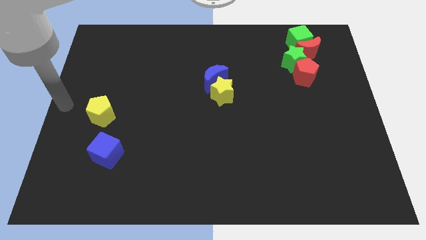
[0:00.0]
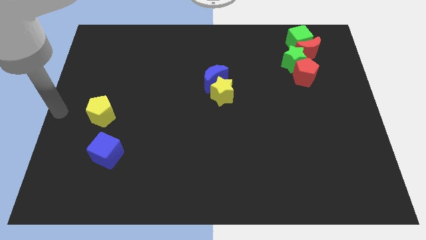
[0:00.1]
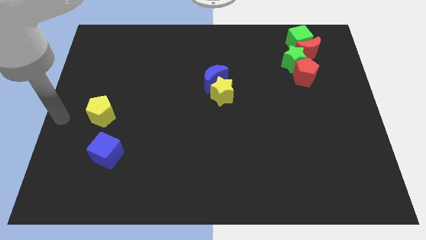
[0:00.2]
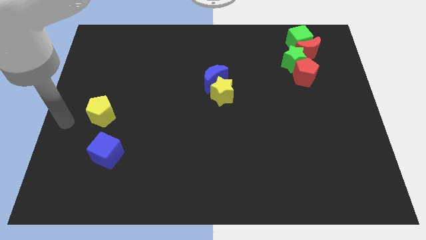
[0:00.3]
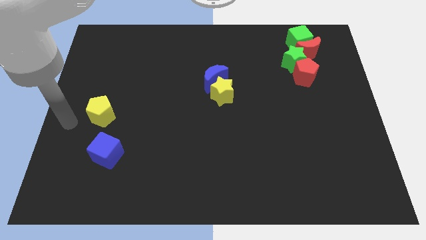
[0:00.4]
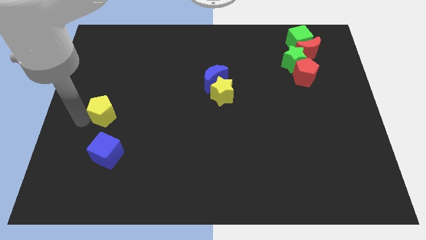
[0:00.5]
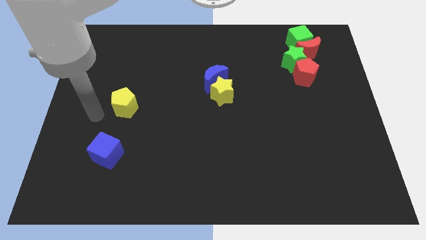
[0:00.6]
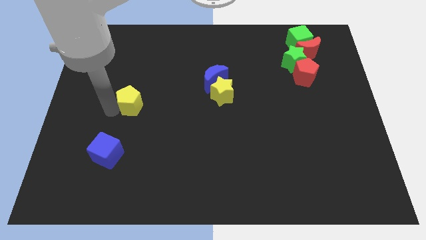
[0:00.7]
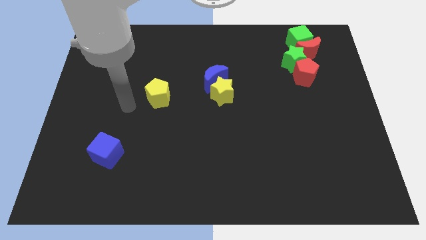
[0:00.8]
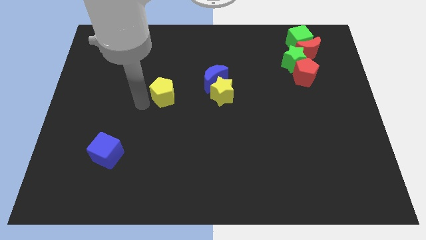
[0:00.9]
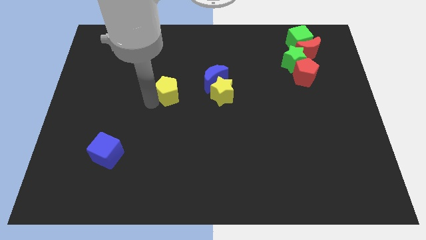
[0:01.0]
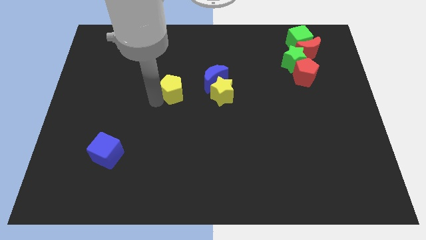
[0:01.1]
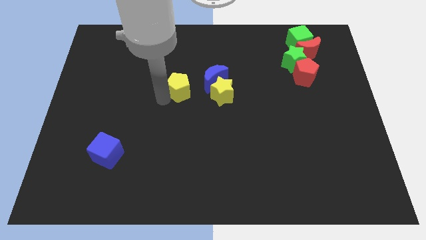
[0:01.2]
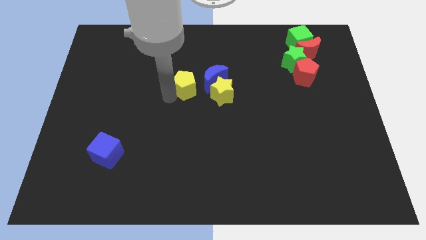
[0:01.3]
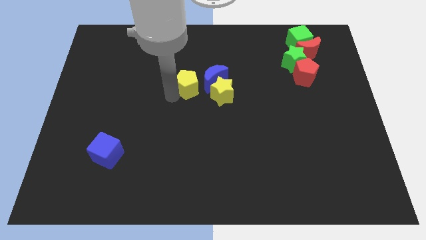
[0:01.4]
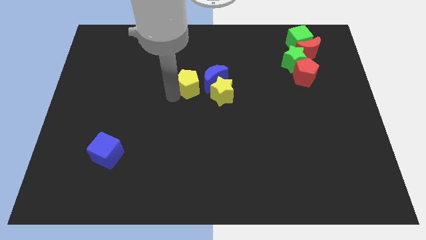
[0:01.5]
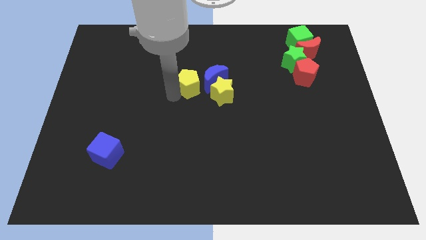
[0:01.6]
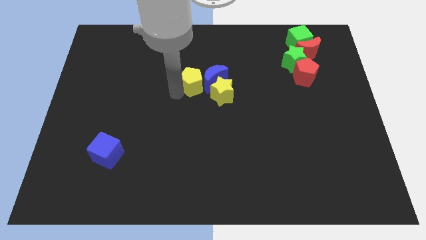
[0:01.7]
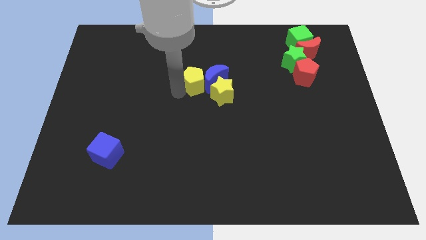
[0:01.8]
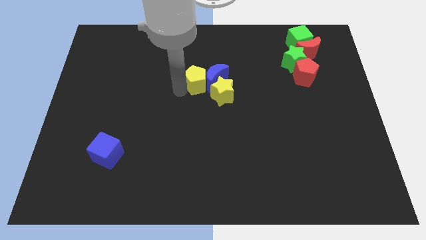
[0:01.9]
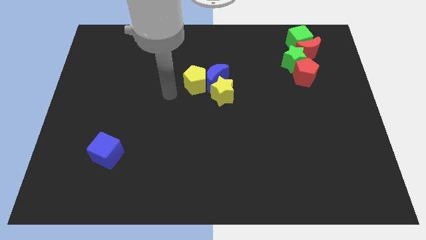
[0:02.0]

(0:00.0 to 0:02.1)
move yellow pentagon close to blue moon

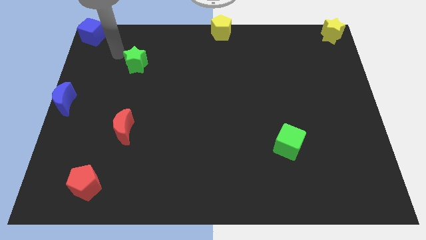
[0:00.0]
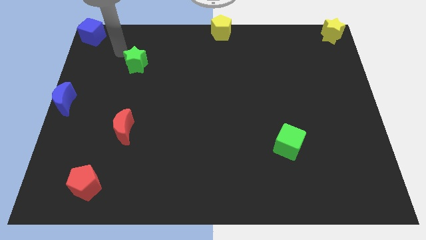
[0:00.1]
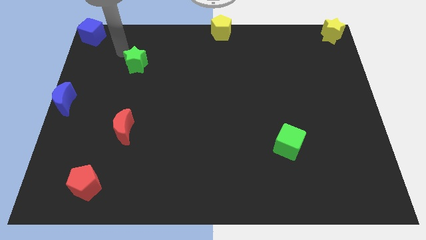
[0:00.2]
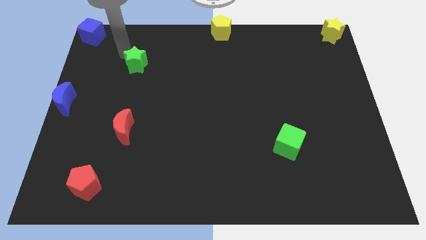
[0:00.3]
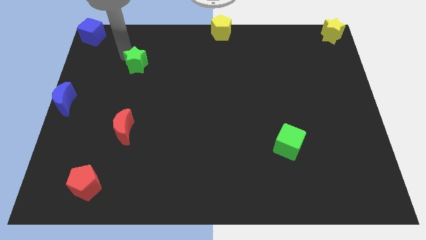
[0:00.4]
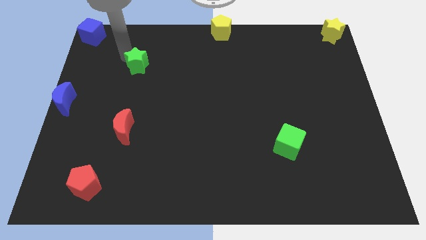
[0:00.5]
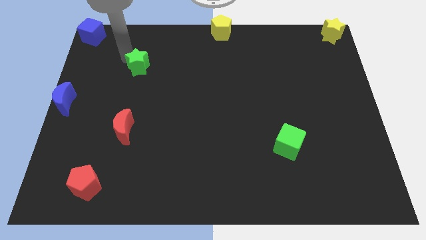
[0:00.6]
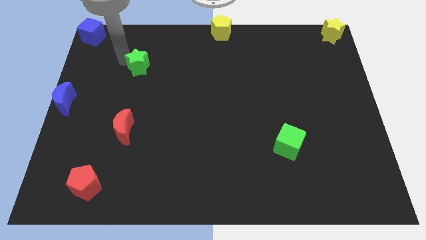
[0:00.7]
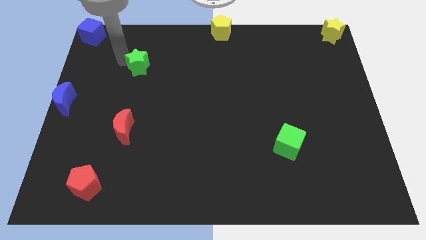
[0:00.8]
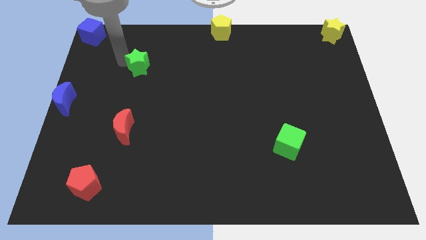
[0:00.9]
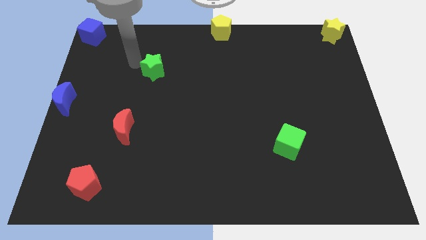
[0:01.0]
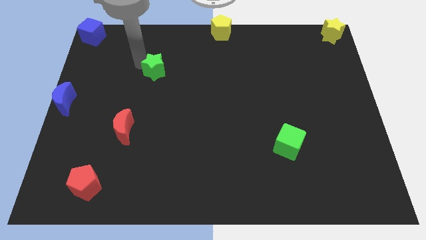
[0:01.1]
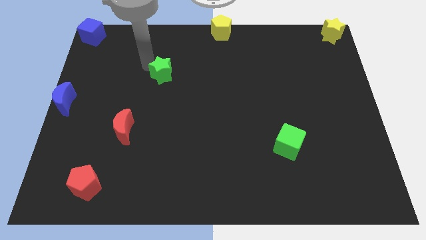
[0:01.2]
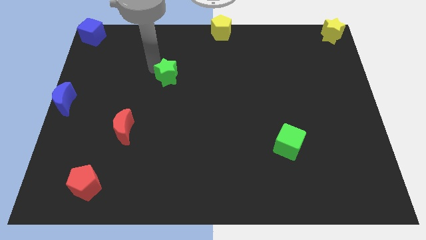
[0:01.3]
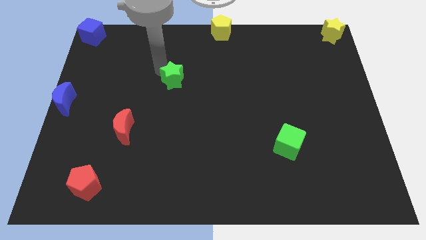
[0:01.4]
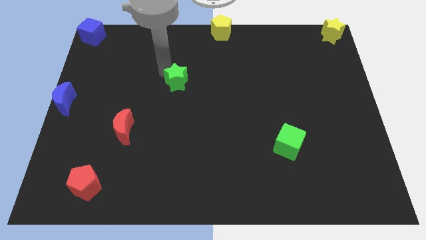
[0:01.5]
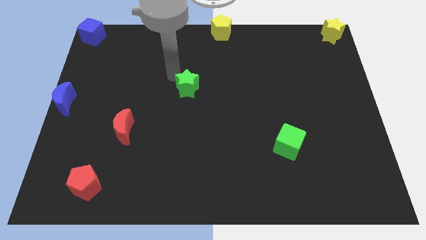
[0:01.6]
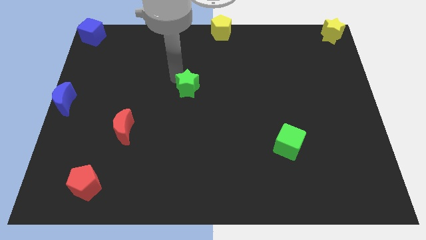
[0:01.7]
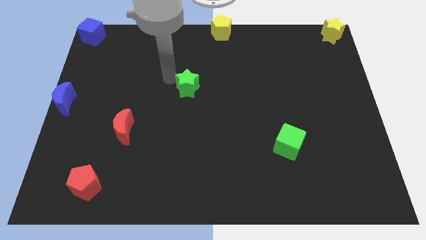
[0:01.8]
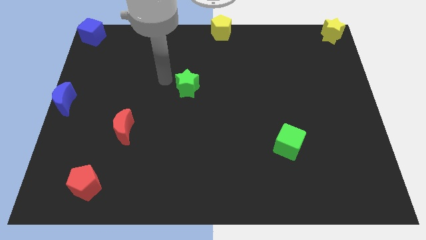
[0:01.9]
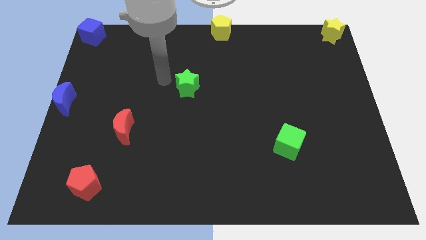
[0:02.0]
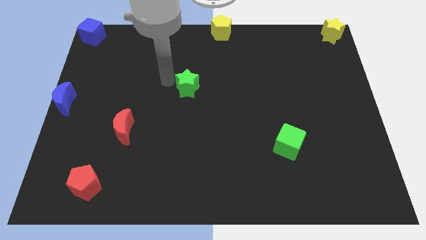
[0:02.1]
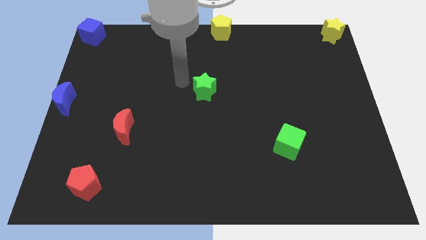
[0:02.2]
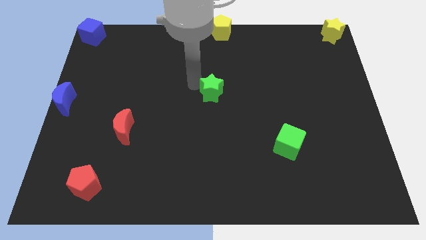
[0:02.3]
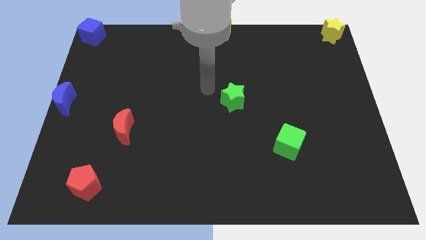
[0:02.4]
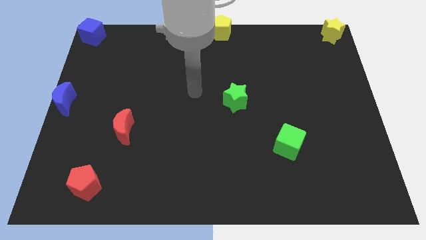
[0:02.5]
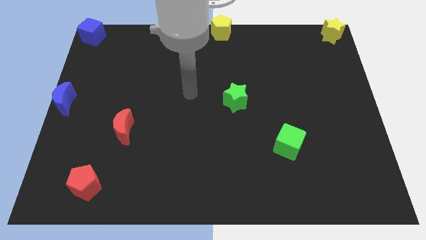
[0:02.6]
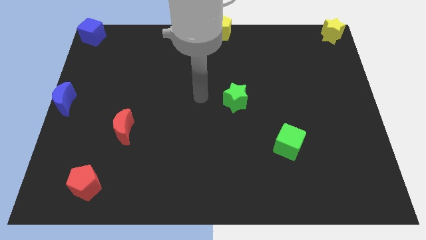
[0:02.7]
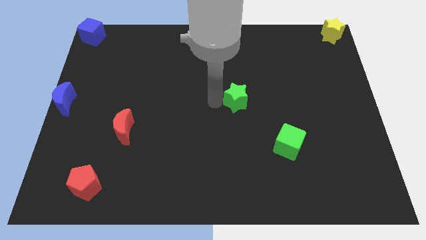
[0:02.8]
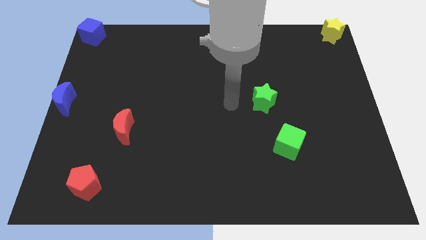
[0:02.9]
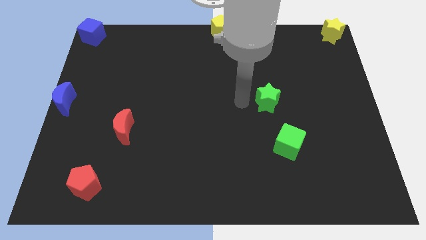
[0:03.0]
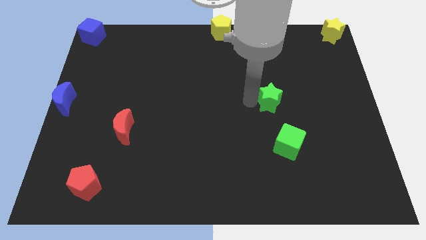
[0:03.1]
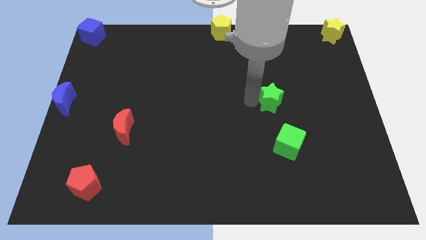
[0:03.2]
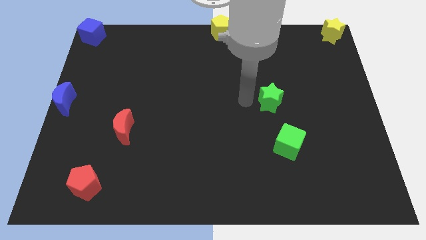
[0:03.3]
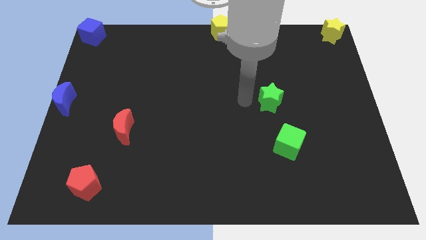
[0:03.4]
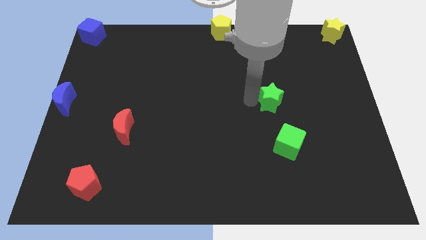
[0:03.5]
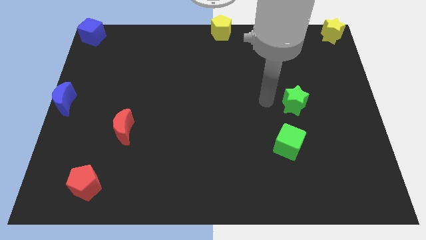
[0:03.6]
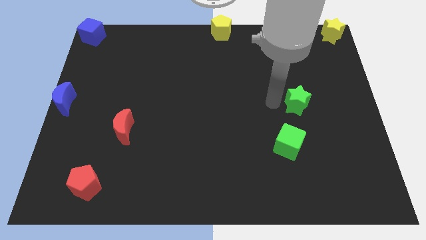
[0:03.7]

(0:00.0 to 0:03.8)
place the green star vertically above the green cube

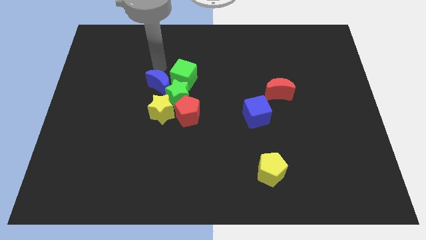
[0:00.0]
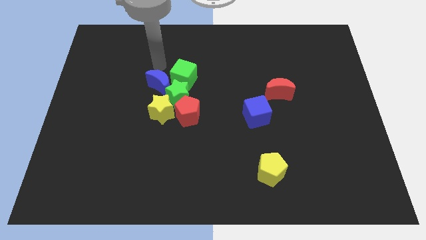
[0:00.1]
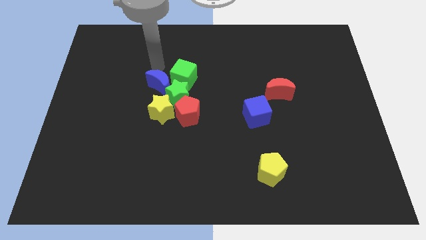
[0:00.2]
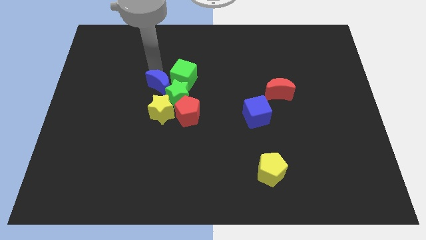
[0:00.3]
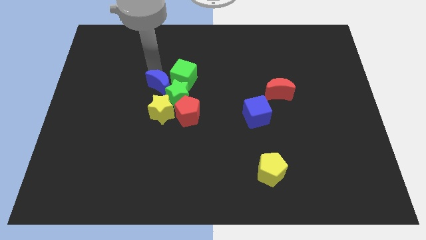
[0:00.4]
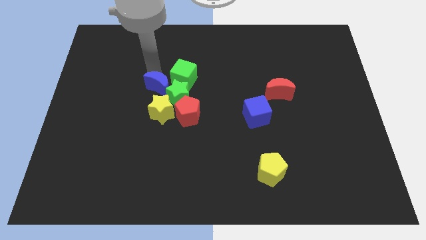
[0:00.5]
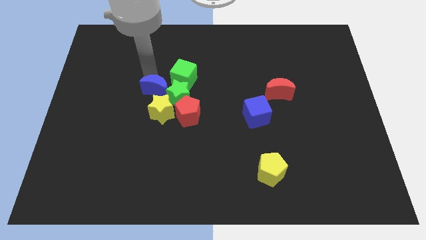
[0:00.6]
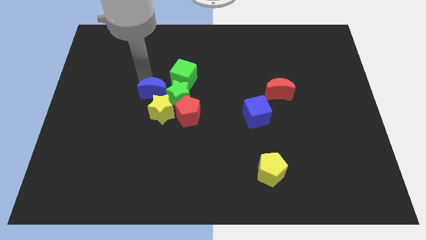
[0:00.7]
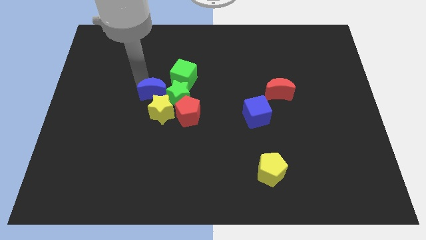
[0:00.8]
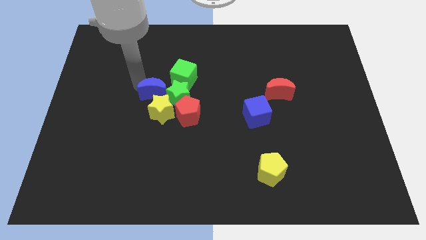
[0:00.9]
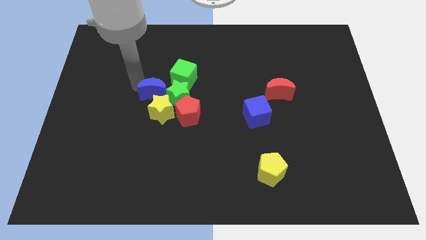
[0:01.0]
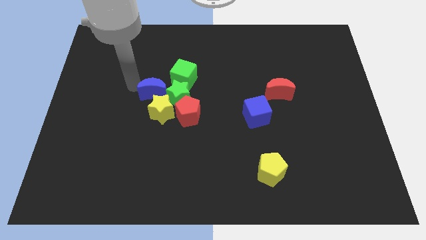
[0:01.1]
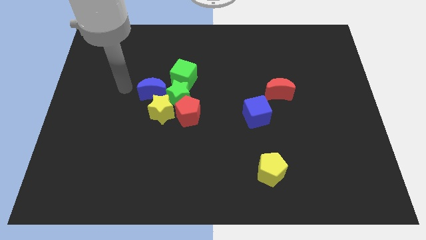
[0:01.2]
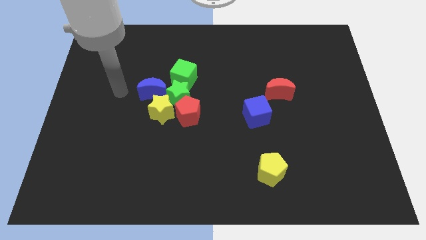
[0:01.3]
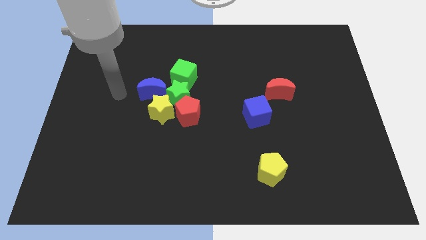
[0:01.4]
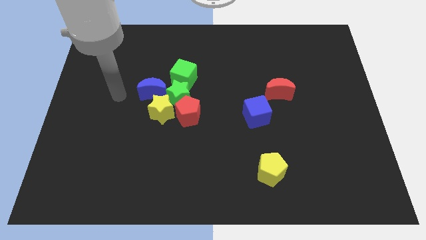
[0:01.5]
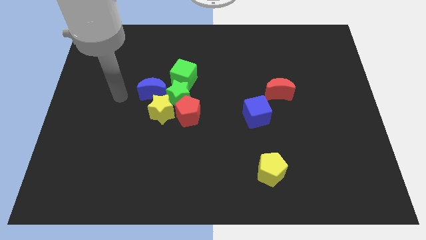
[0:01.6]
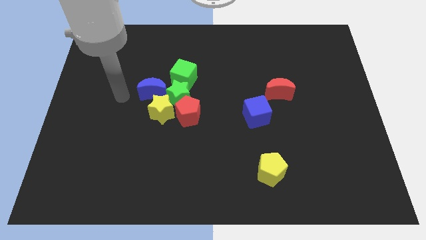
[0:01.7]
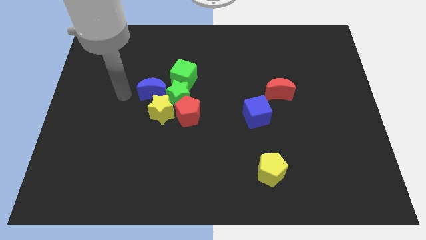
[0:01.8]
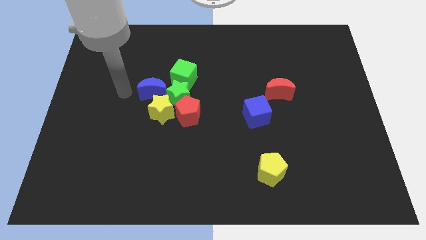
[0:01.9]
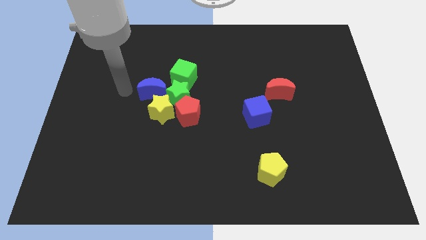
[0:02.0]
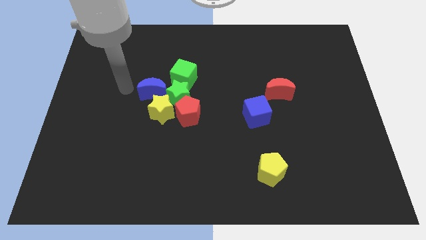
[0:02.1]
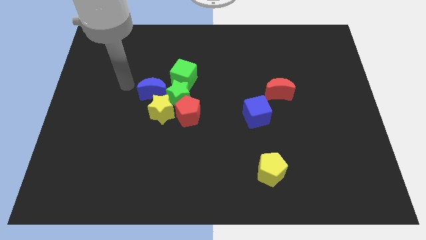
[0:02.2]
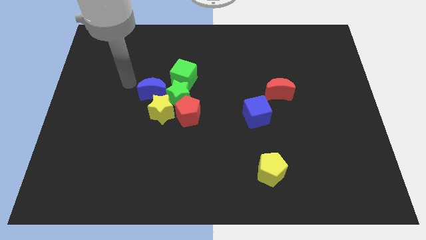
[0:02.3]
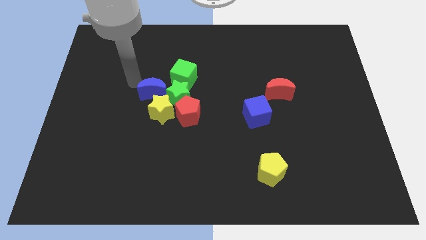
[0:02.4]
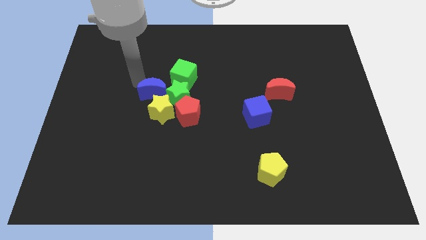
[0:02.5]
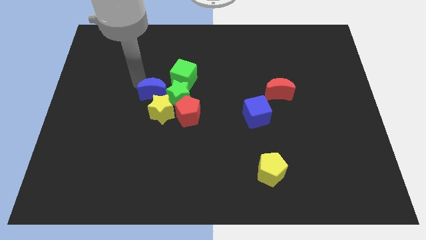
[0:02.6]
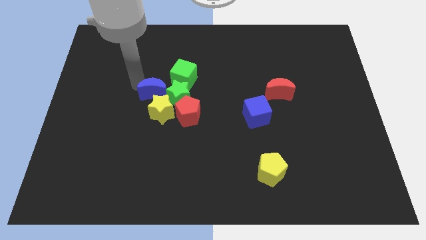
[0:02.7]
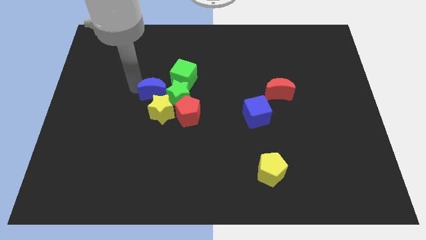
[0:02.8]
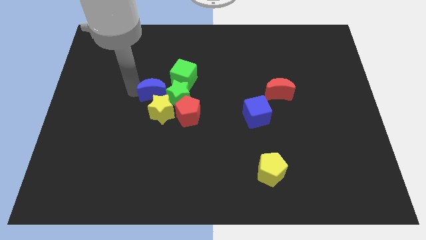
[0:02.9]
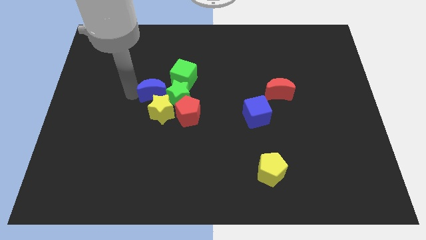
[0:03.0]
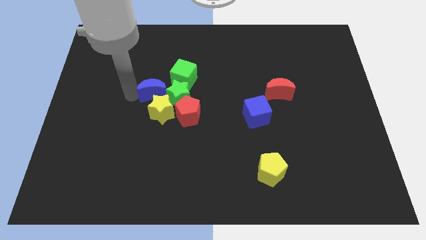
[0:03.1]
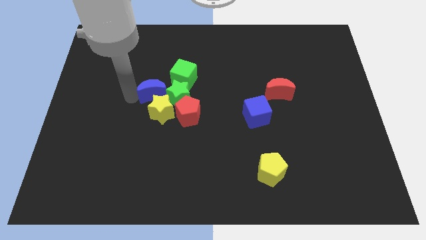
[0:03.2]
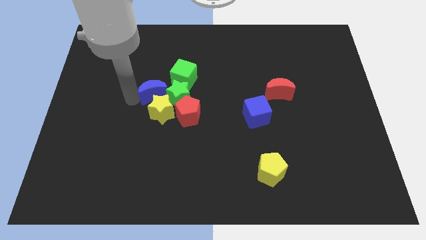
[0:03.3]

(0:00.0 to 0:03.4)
drag the blue moon above the yellow star

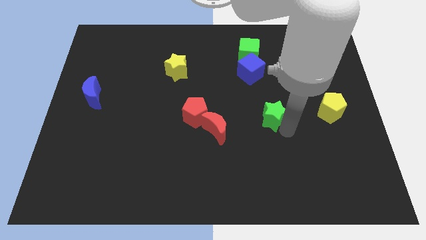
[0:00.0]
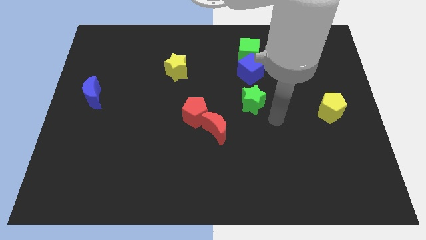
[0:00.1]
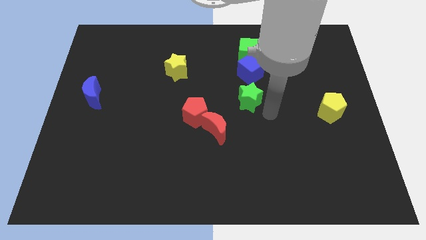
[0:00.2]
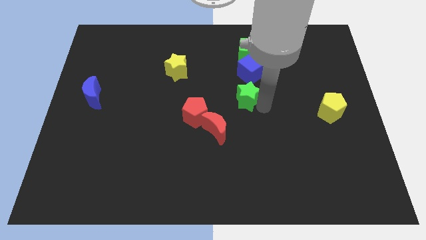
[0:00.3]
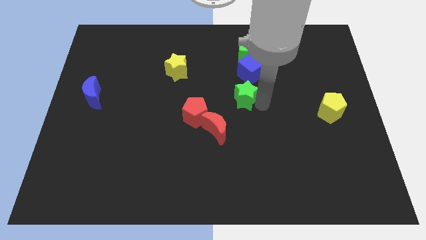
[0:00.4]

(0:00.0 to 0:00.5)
move the green star below the blue cube
